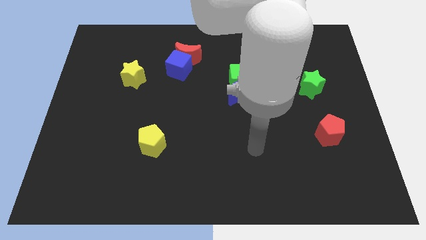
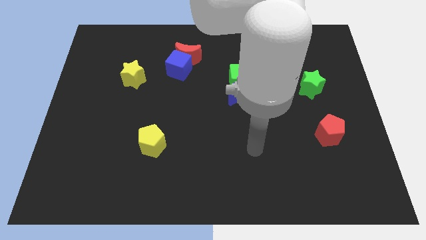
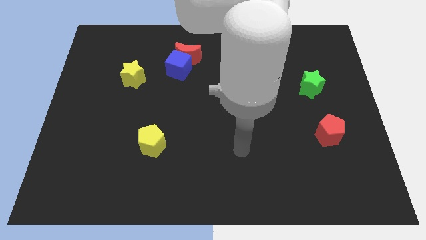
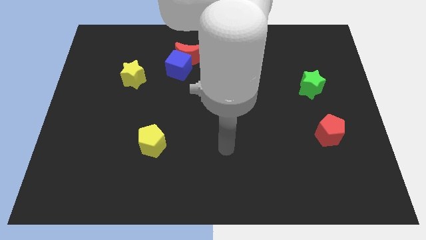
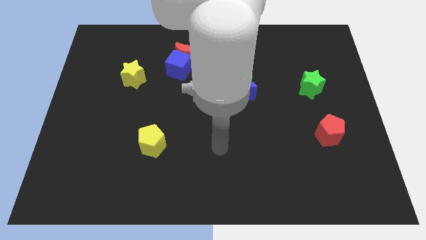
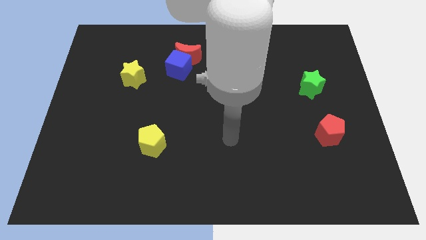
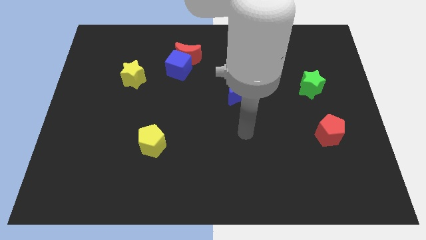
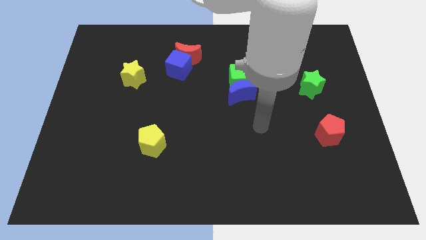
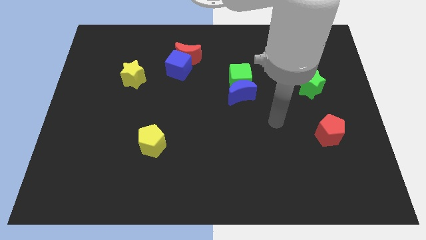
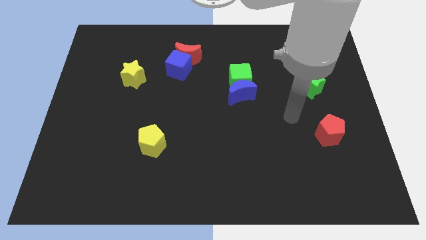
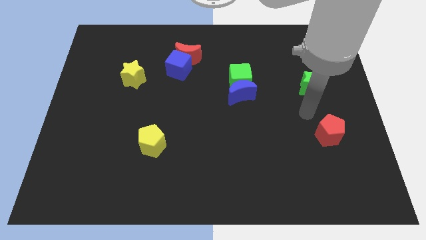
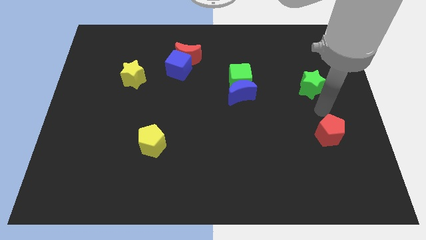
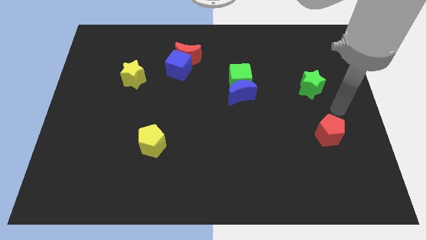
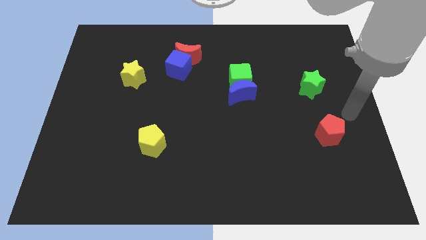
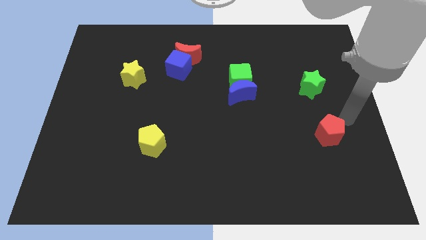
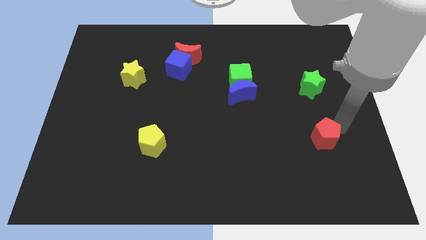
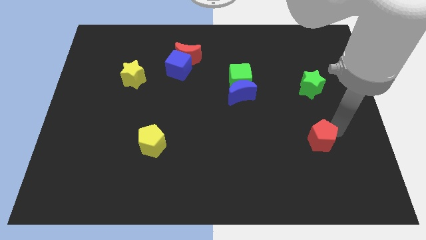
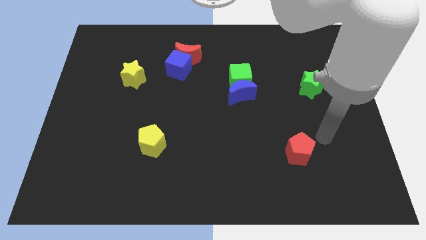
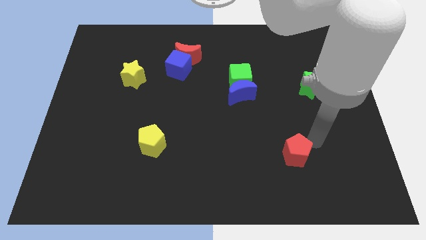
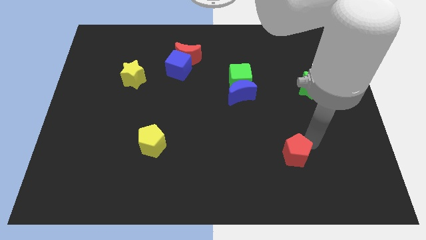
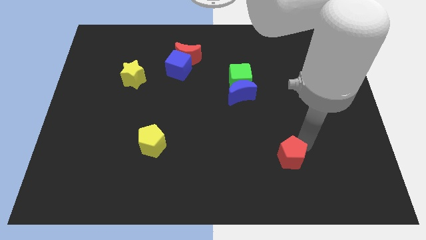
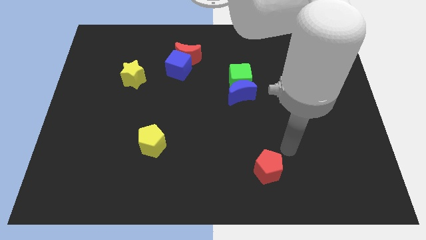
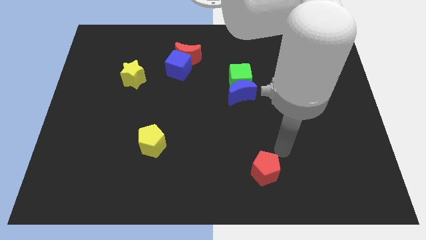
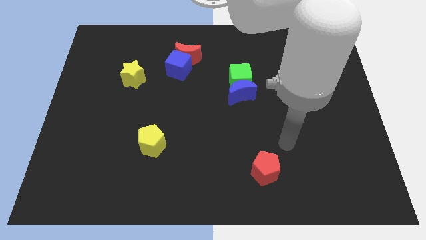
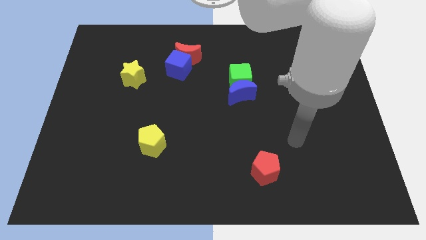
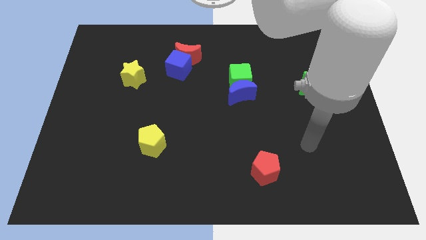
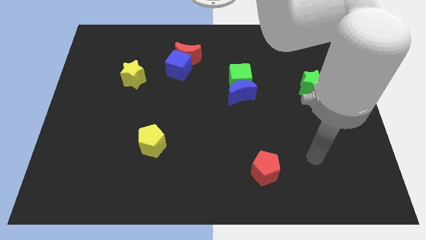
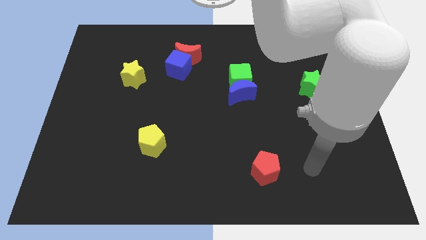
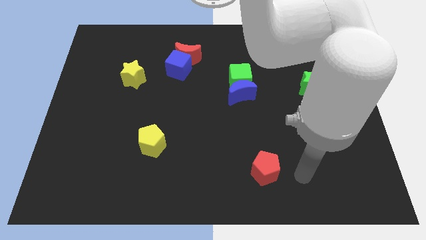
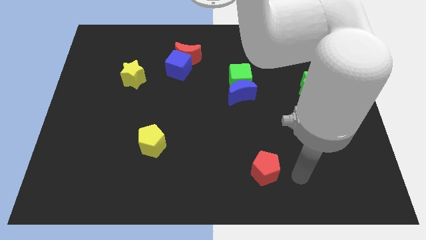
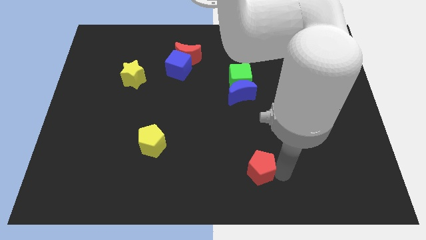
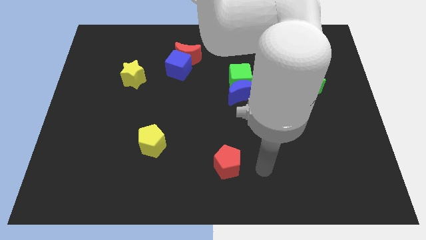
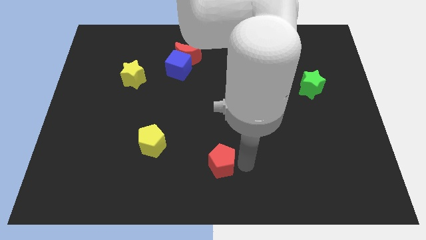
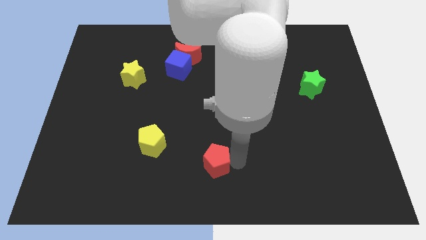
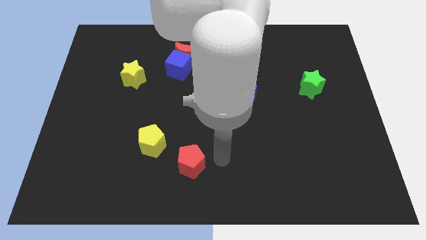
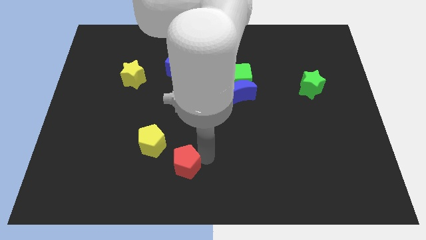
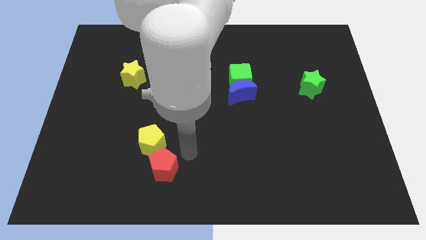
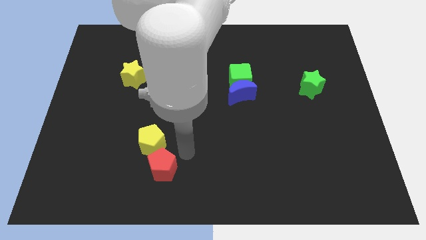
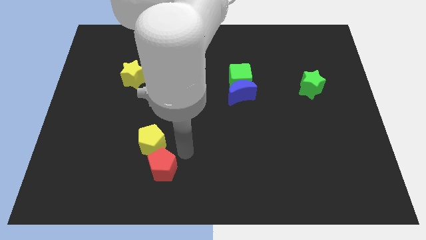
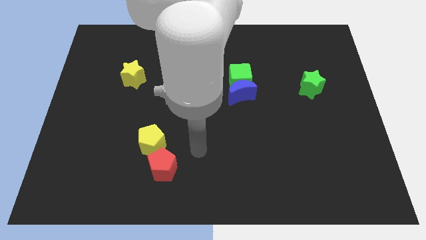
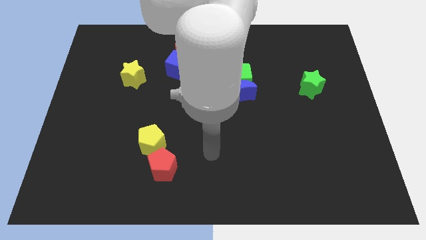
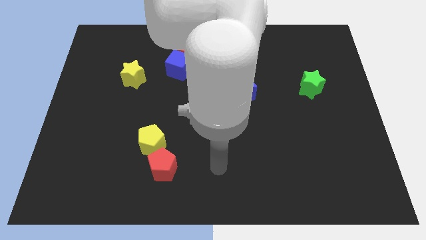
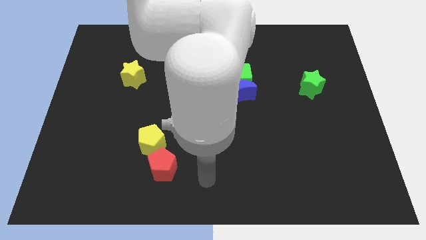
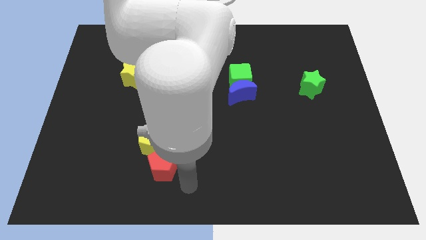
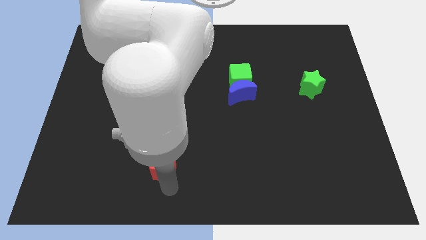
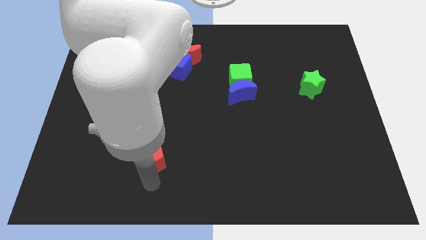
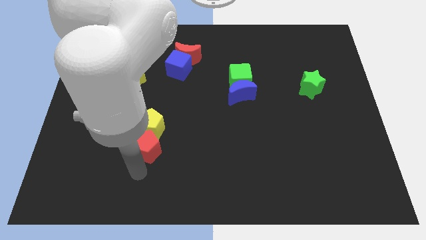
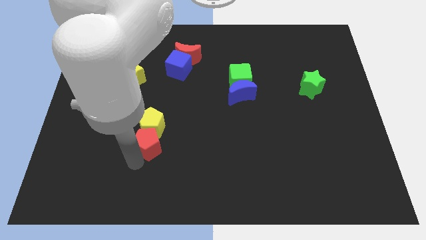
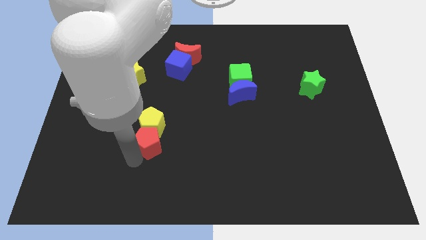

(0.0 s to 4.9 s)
move the red pentagon into the yellow pentagon

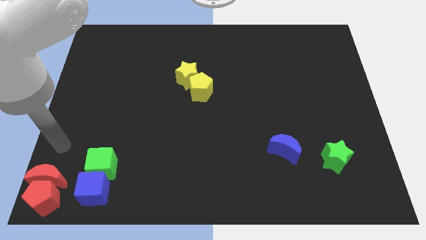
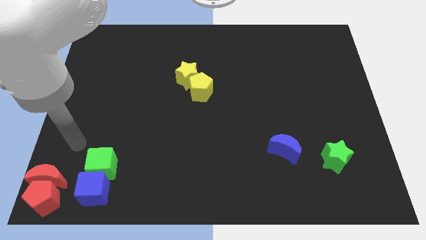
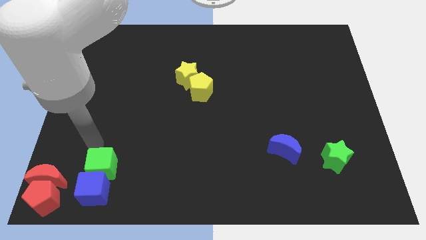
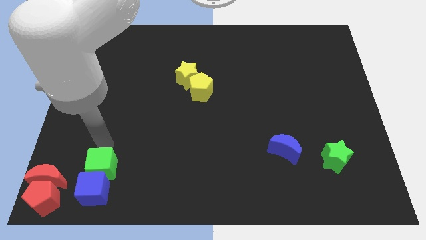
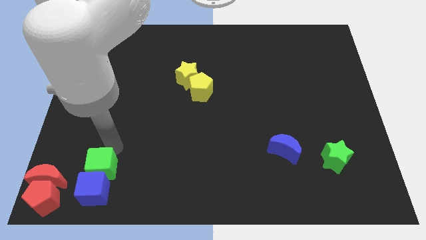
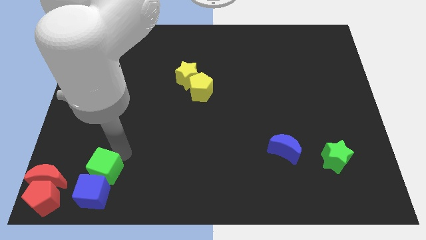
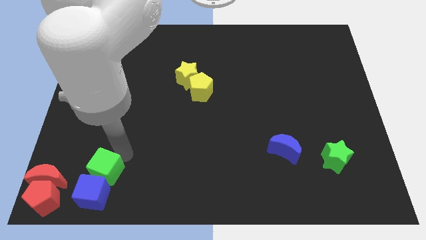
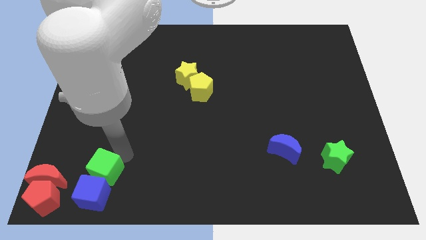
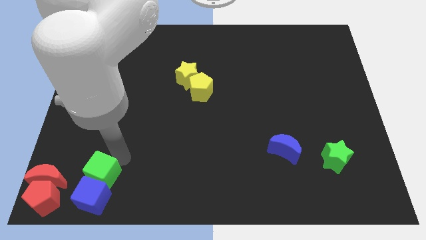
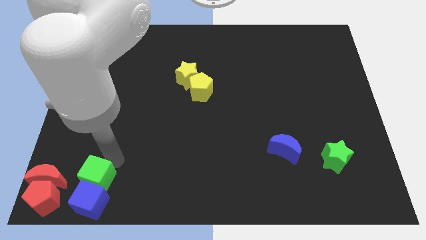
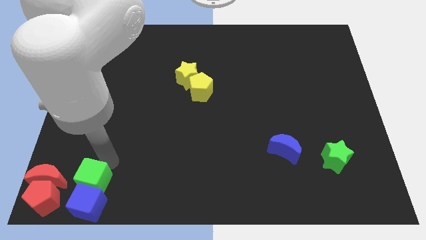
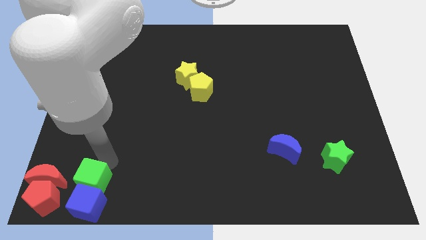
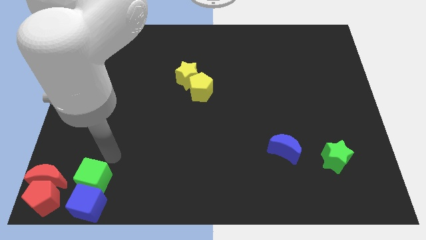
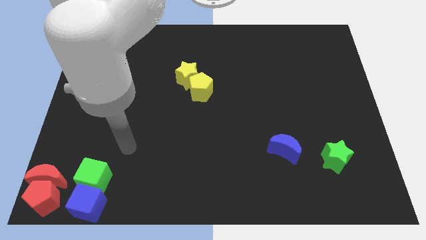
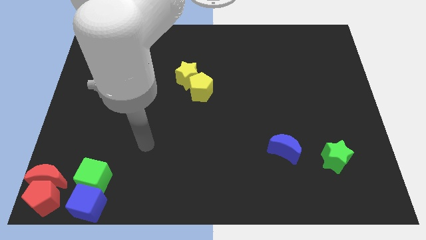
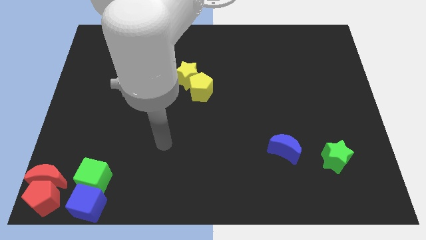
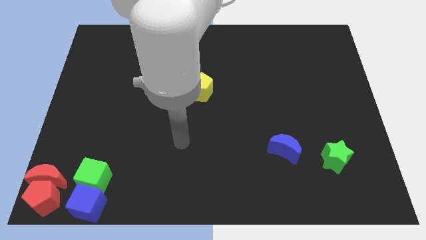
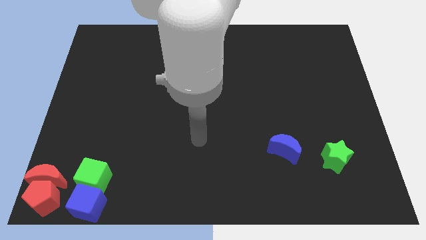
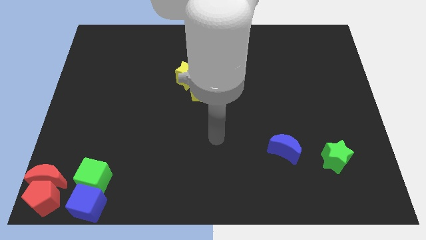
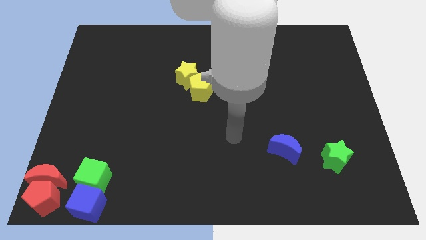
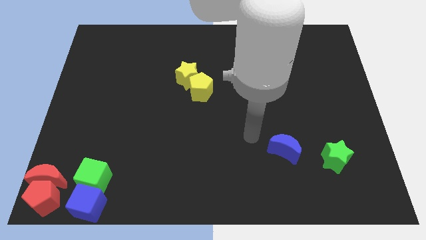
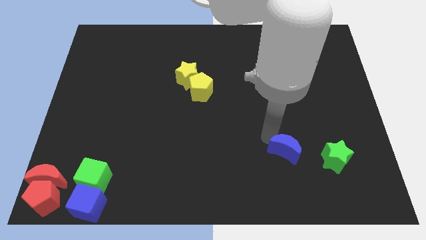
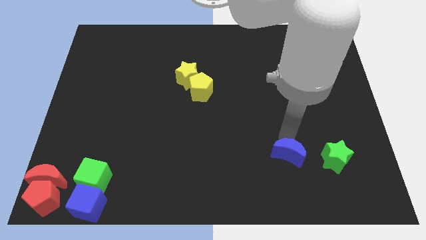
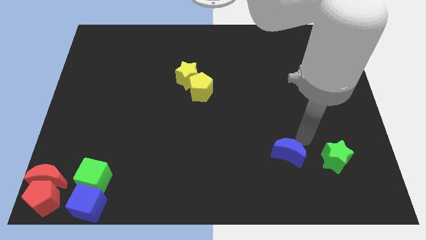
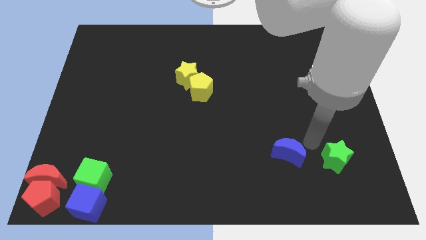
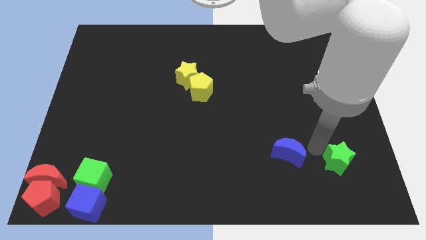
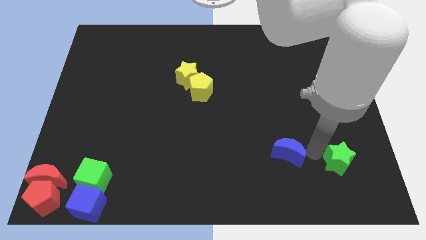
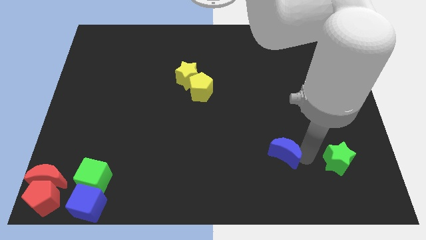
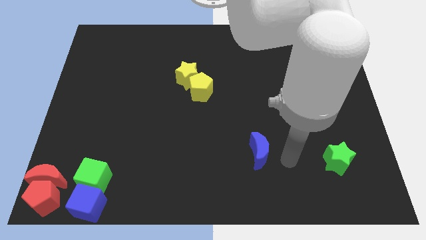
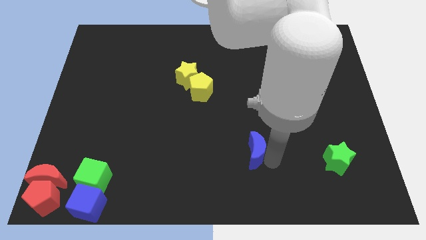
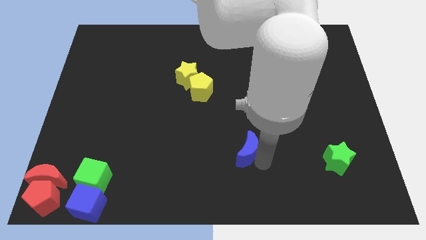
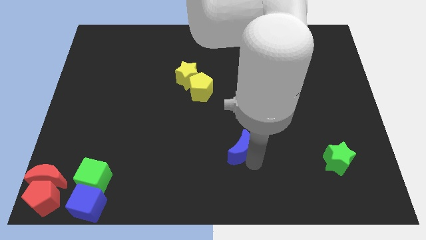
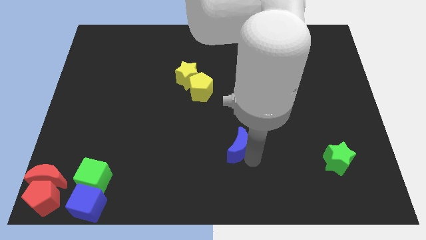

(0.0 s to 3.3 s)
place the blue moon to the center of the board

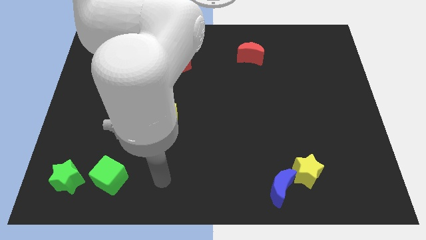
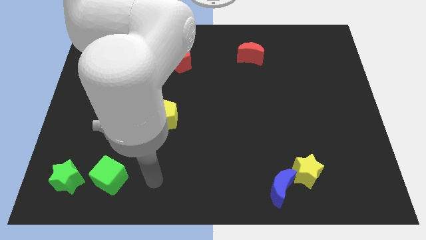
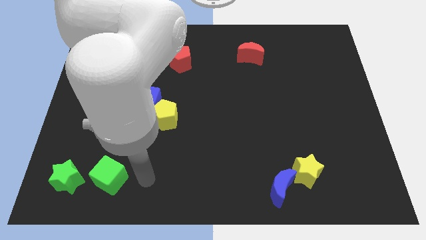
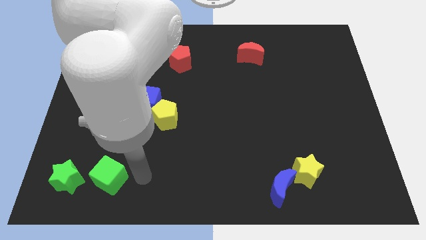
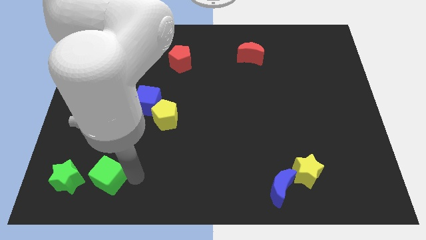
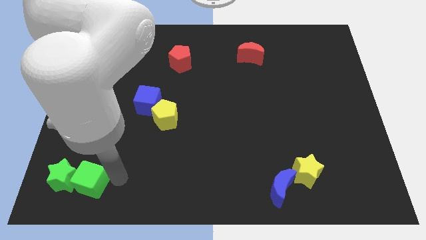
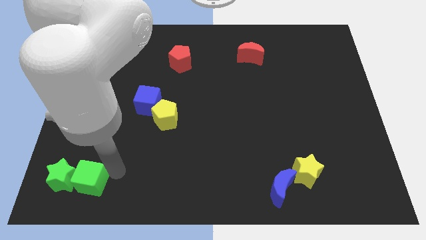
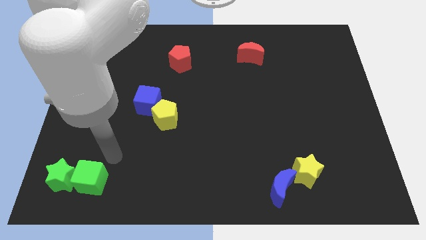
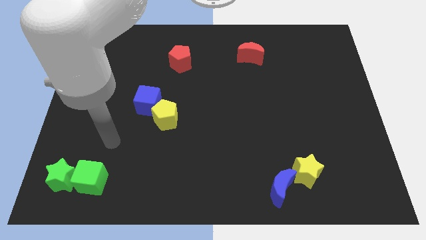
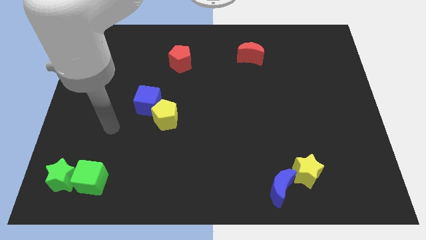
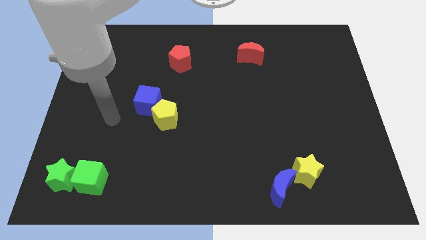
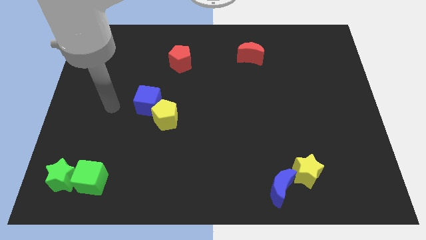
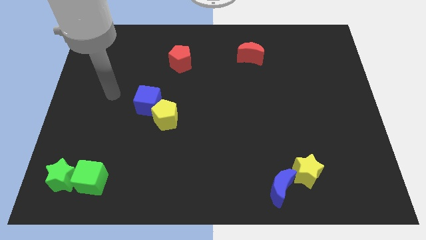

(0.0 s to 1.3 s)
push the green cube into the green star
